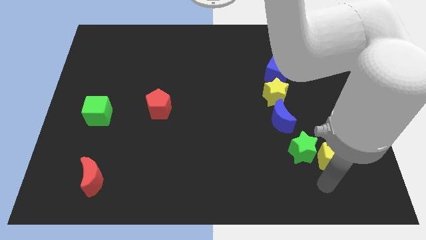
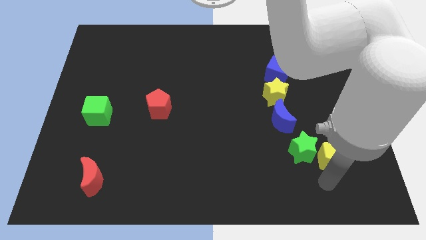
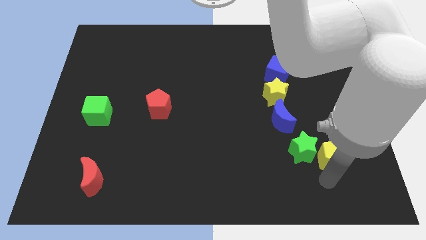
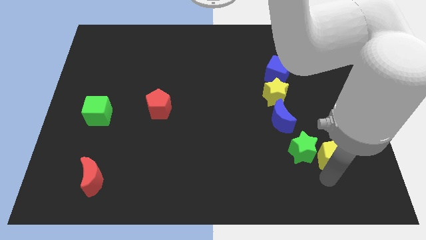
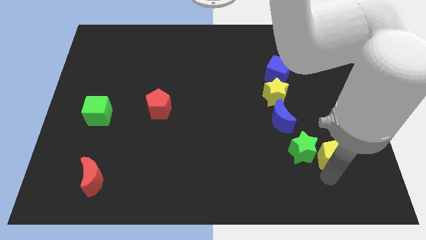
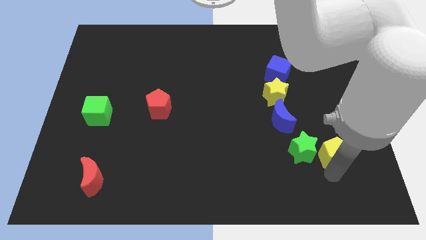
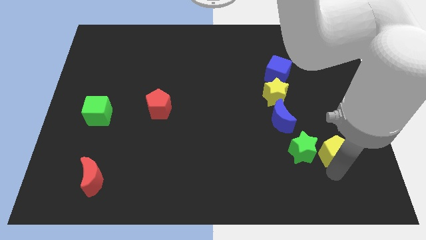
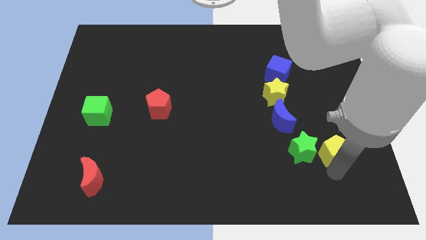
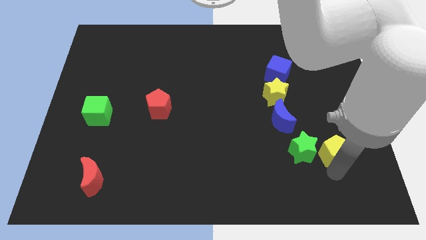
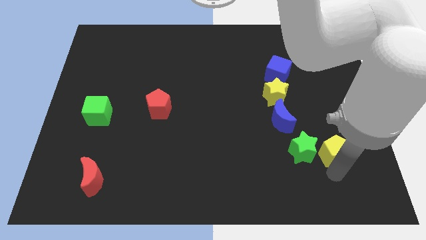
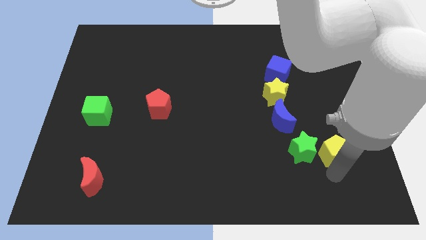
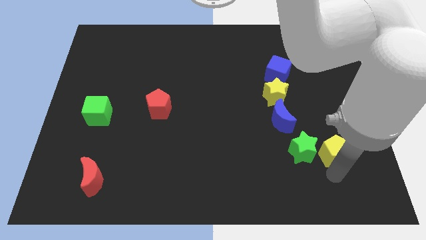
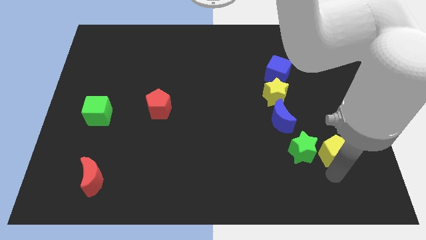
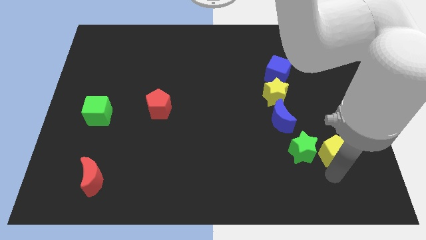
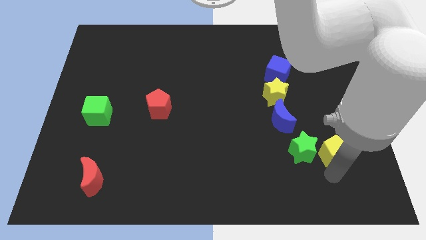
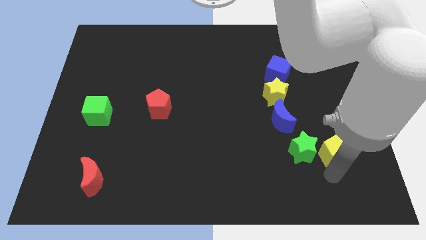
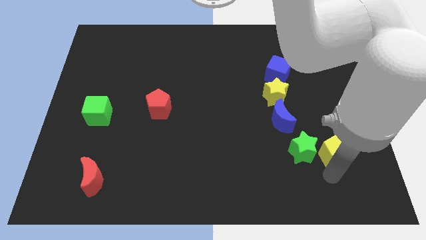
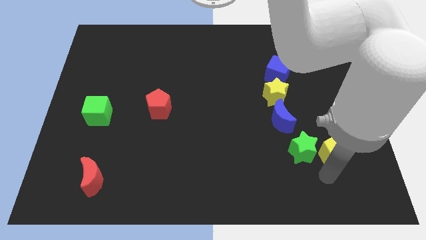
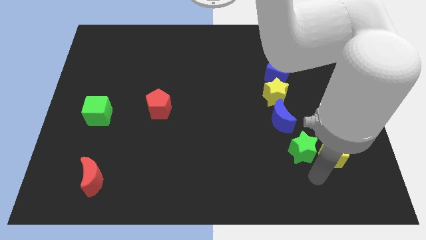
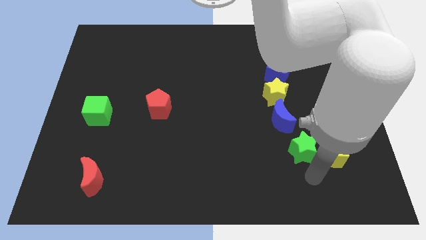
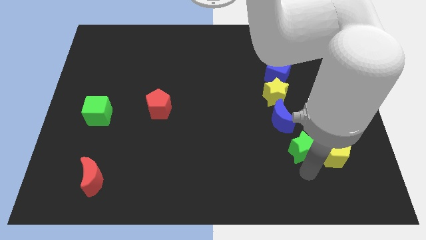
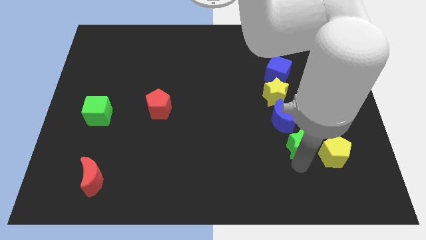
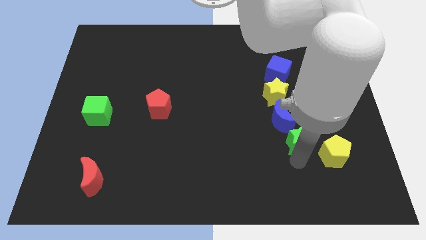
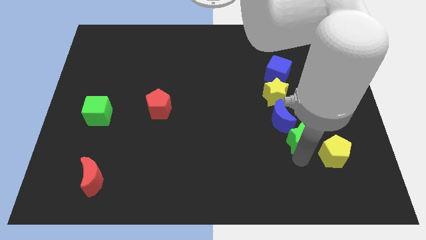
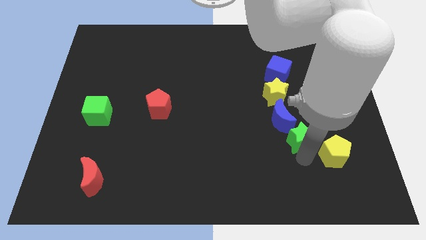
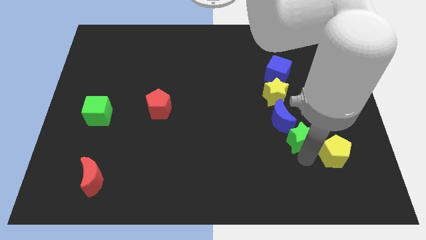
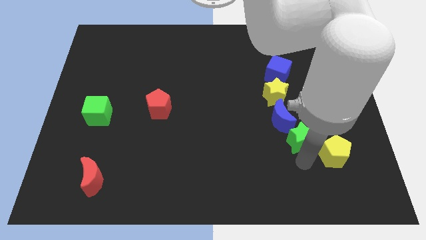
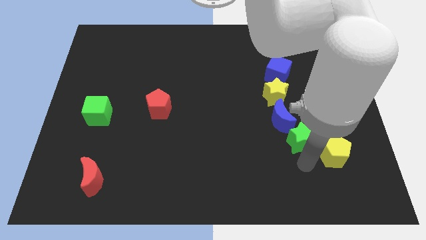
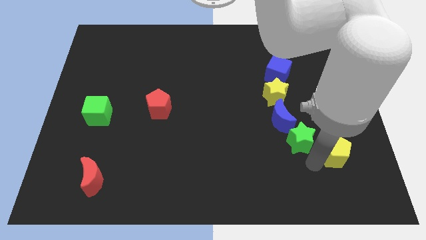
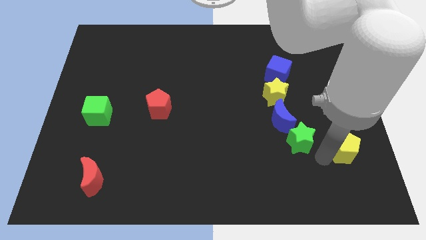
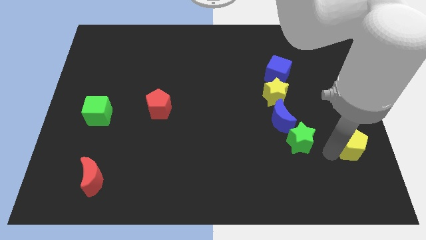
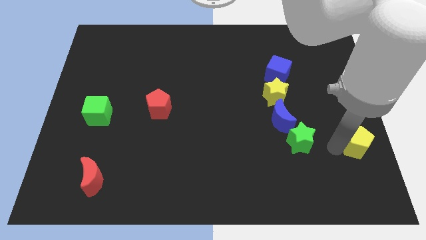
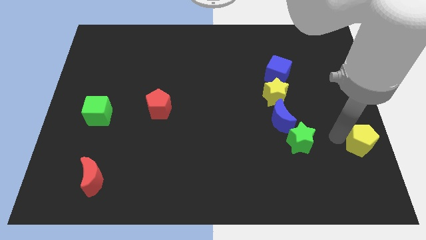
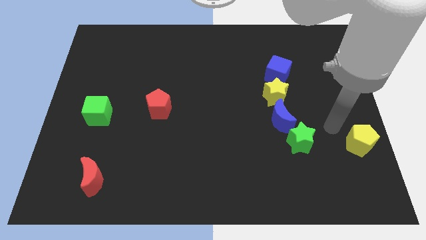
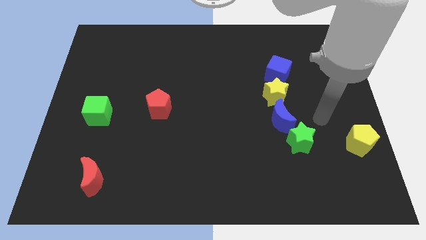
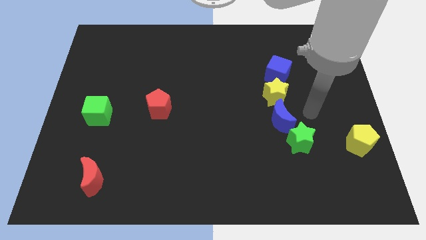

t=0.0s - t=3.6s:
push the yellow pentagon to the parallel right of green star

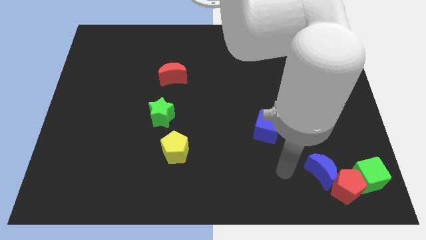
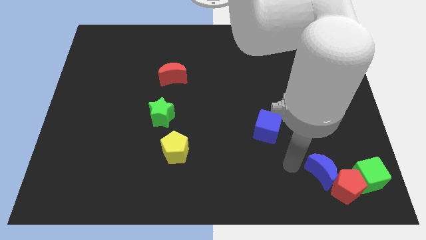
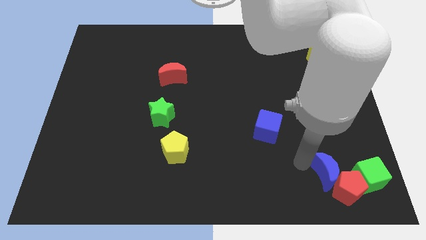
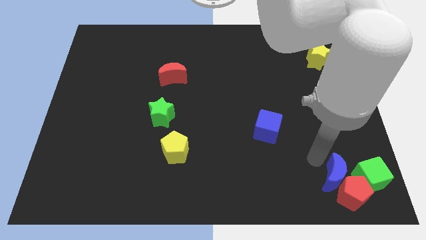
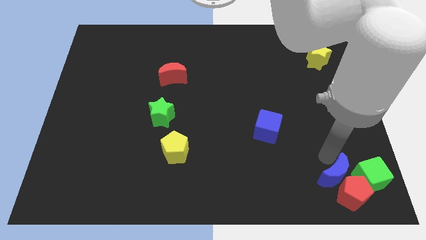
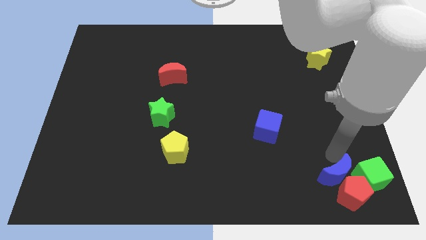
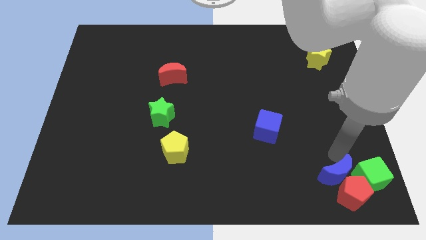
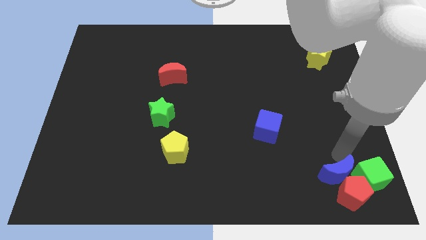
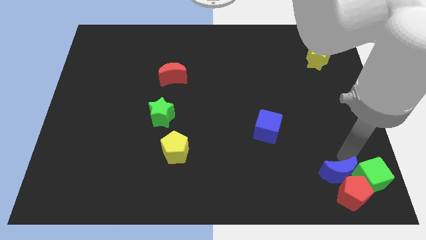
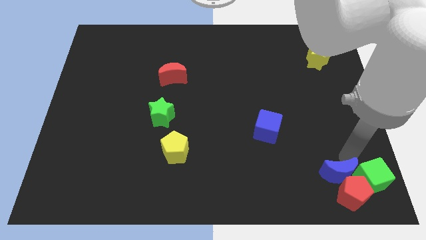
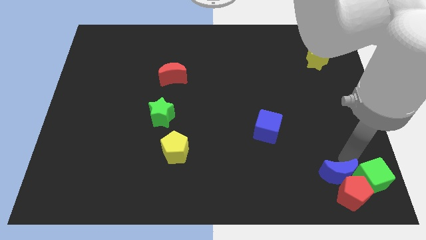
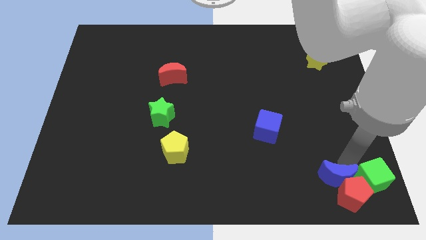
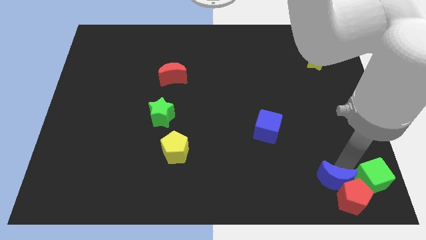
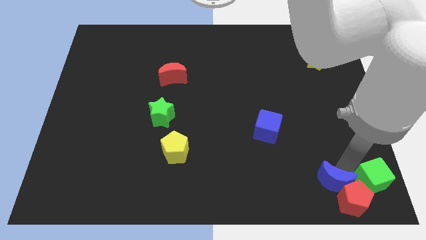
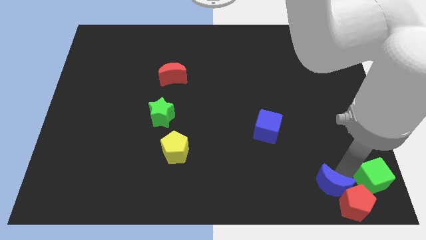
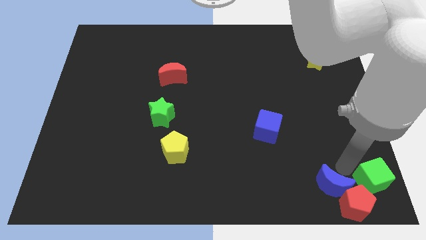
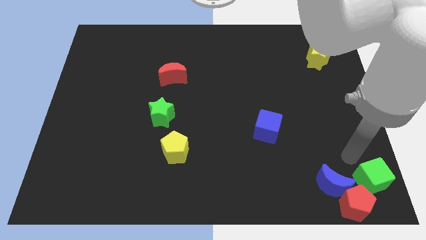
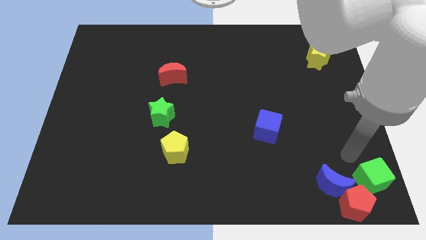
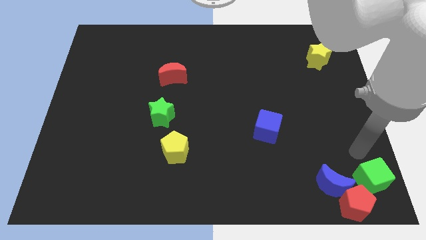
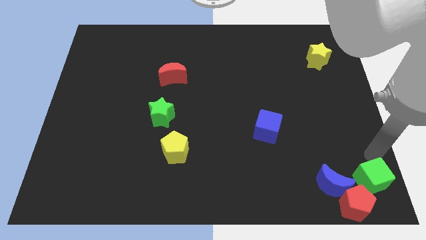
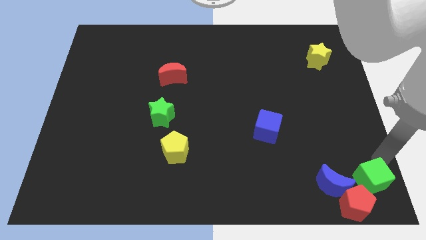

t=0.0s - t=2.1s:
move your arm towards the green cube

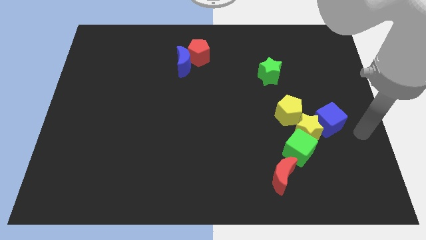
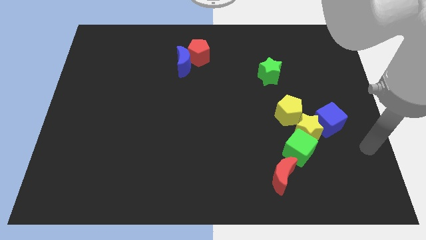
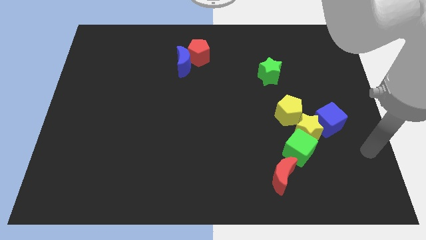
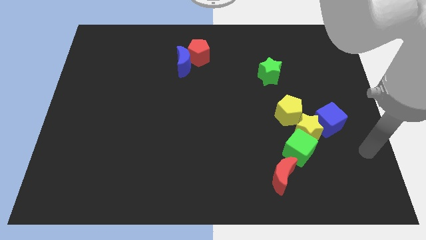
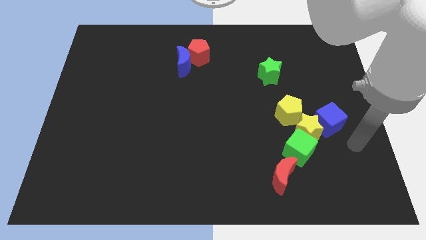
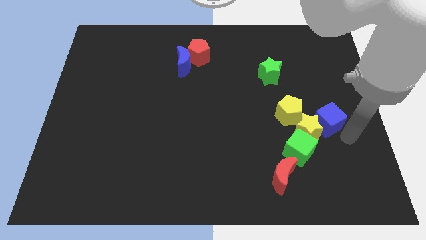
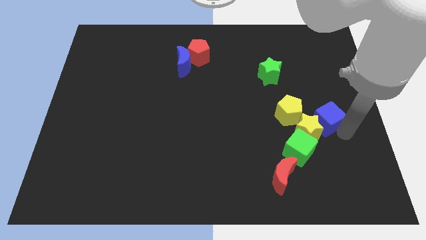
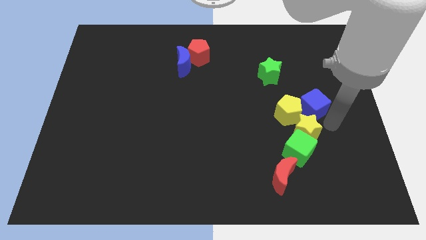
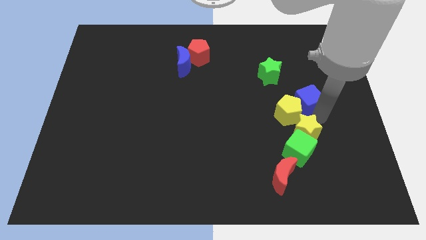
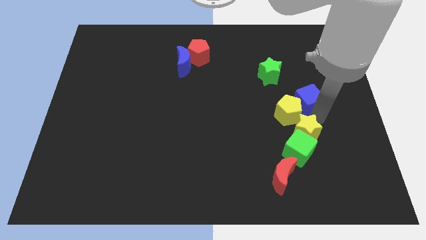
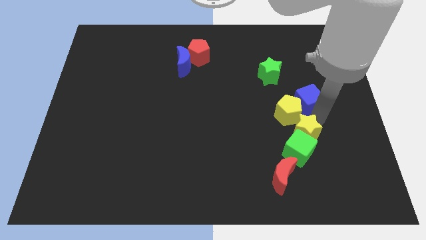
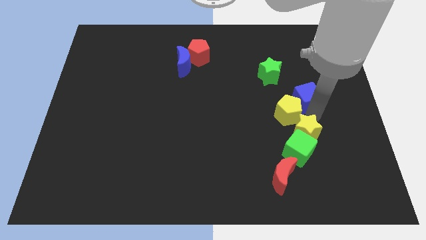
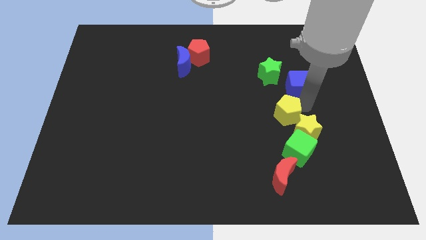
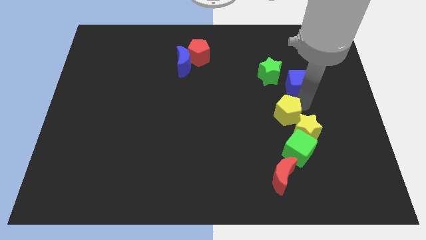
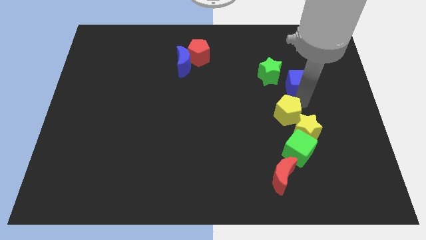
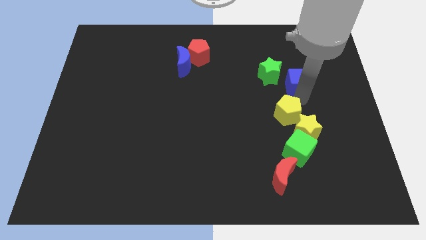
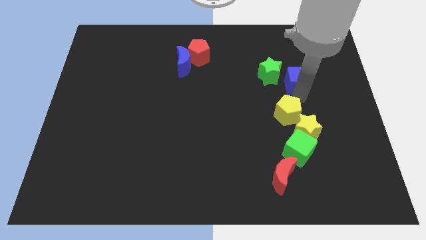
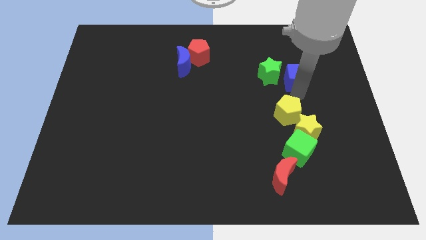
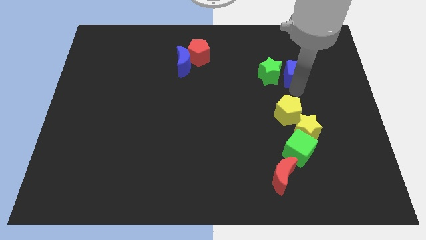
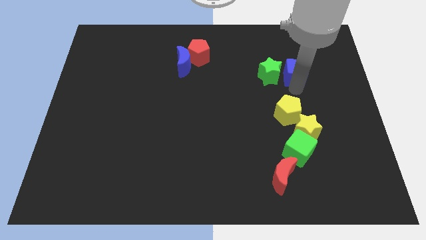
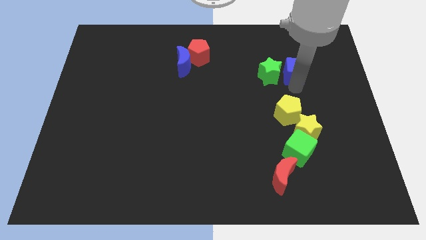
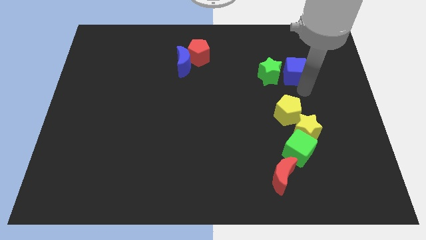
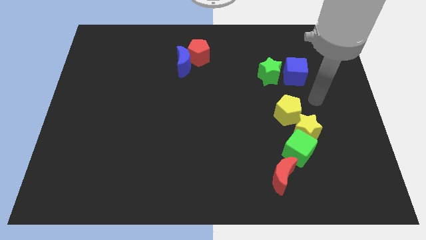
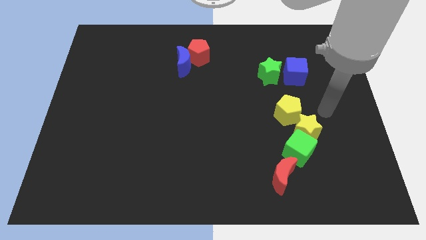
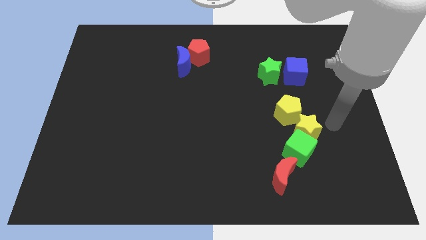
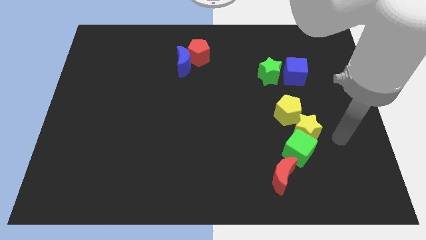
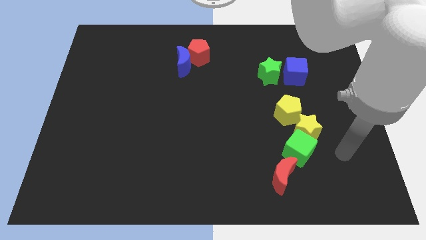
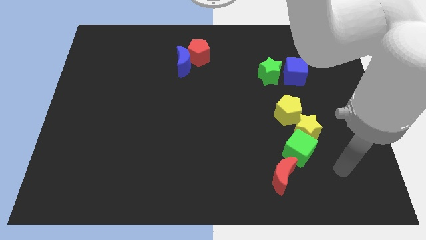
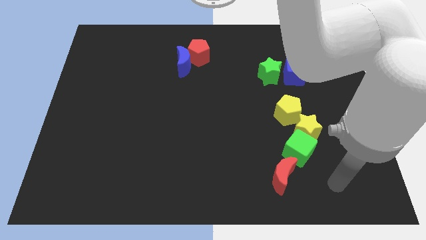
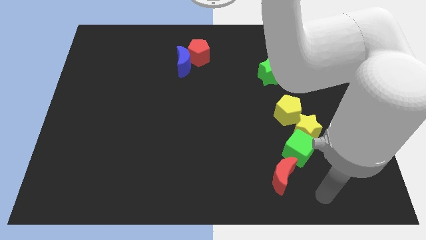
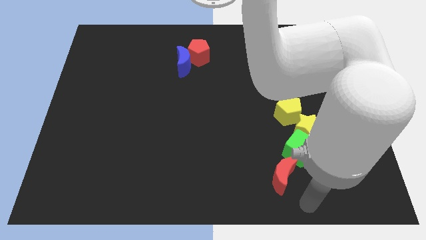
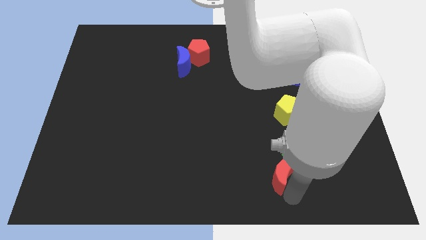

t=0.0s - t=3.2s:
separate blue cube from yellow star
